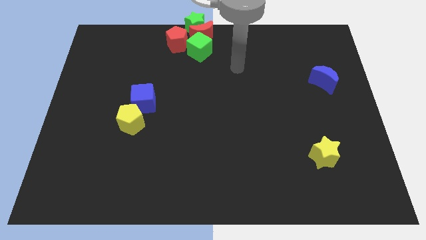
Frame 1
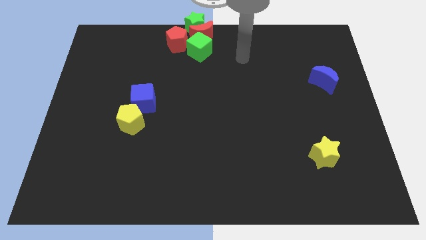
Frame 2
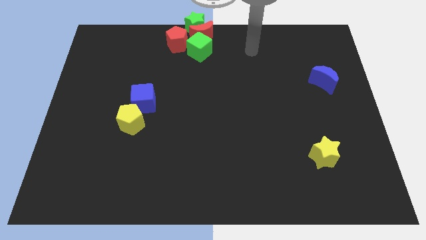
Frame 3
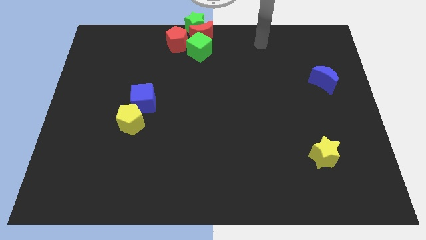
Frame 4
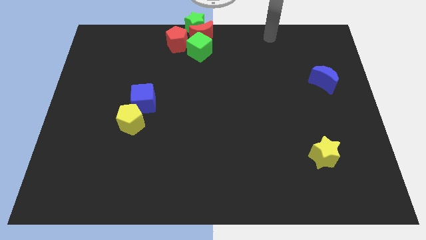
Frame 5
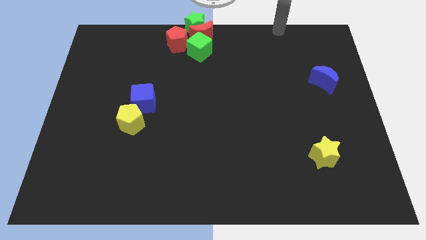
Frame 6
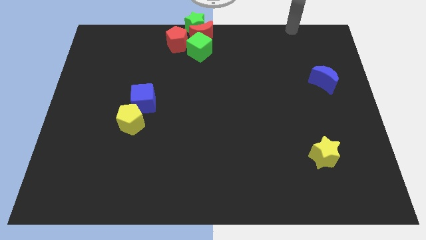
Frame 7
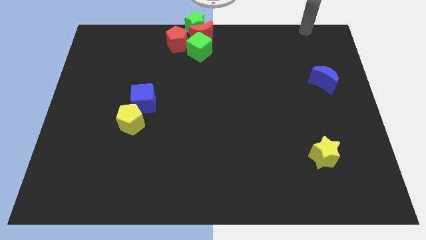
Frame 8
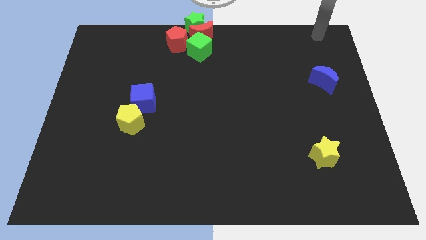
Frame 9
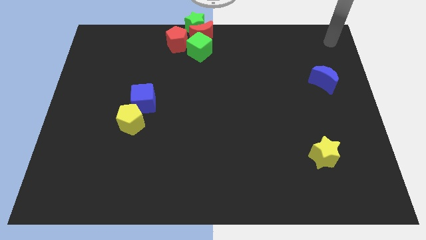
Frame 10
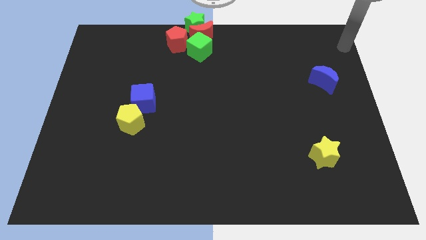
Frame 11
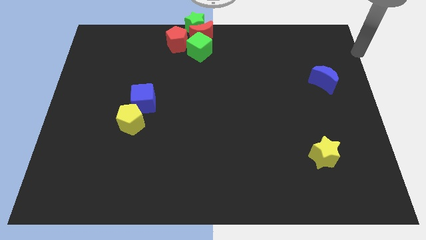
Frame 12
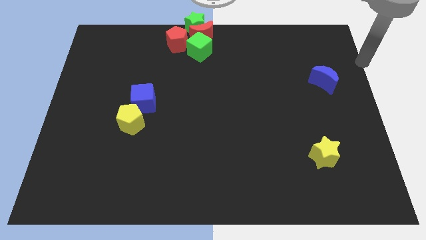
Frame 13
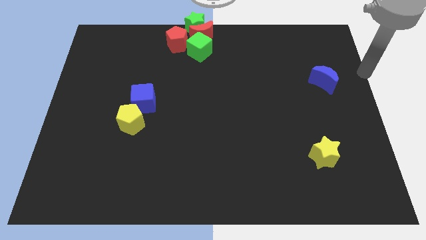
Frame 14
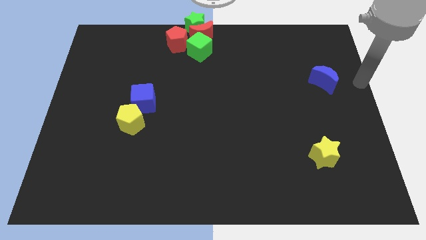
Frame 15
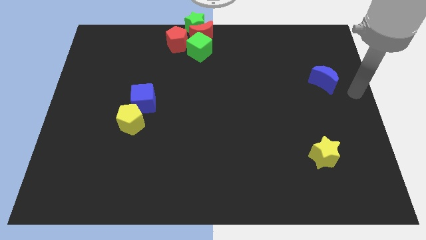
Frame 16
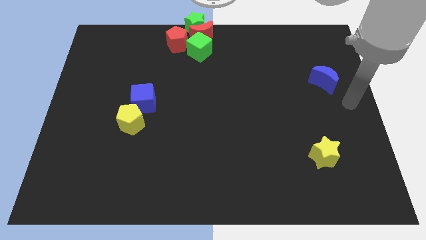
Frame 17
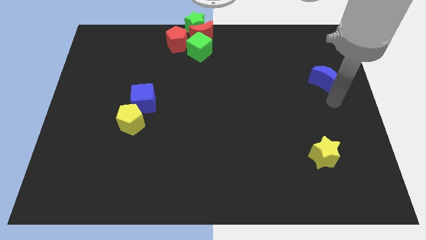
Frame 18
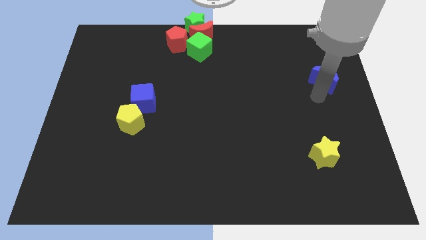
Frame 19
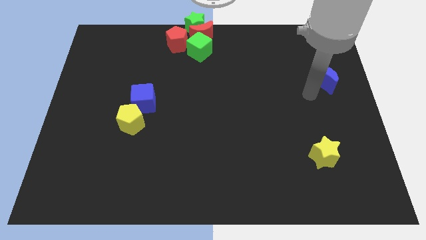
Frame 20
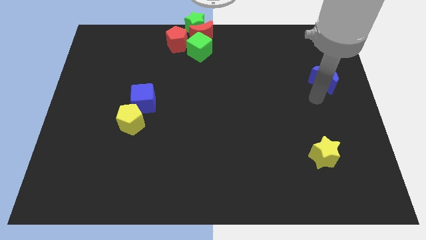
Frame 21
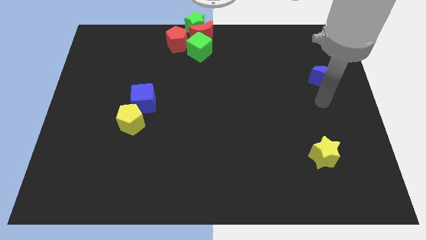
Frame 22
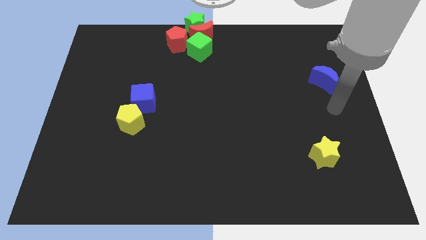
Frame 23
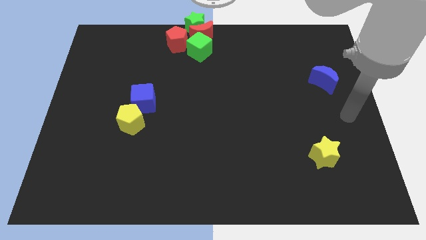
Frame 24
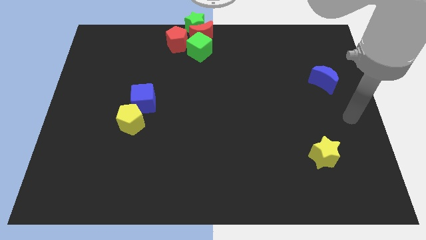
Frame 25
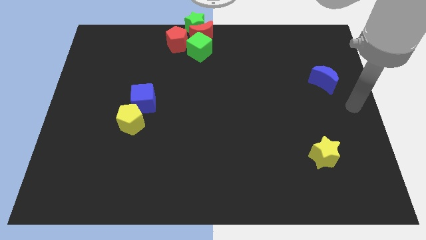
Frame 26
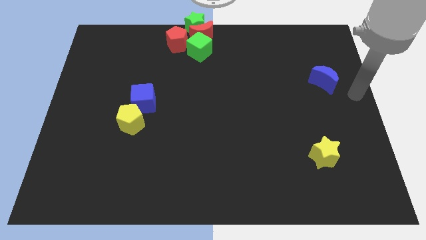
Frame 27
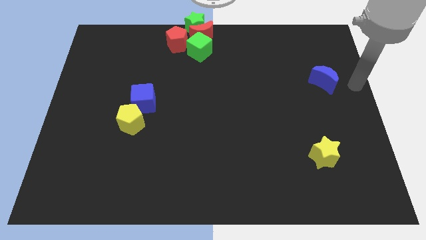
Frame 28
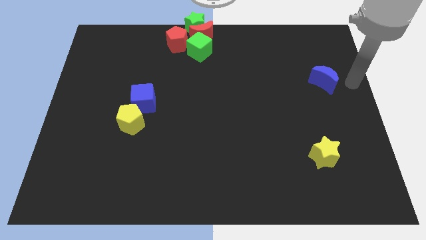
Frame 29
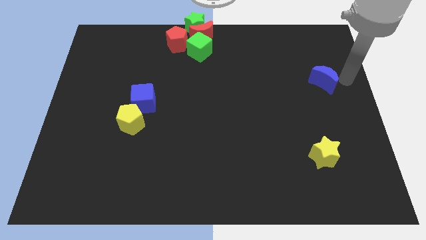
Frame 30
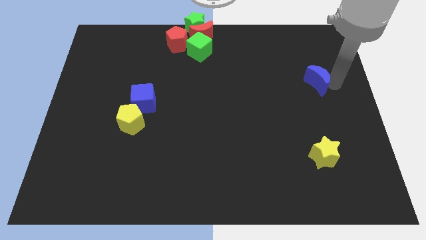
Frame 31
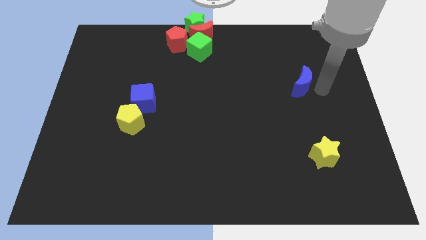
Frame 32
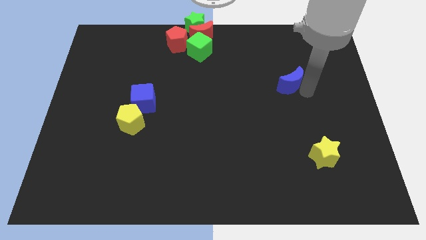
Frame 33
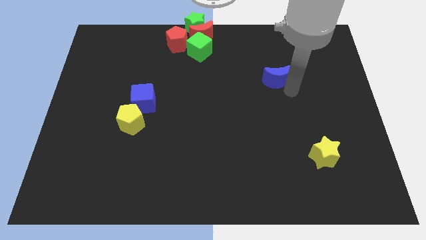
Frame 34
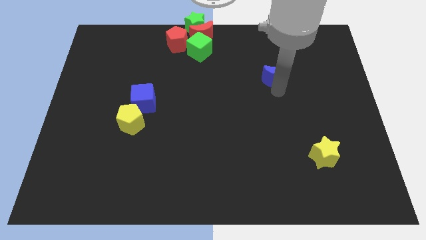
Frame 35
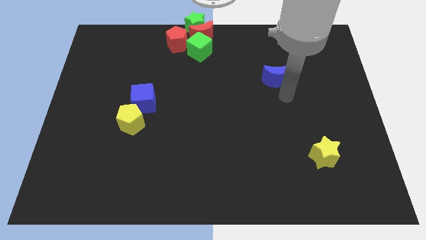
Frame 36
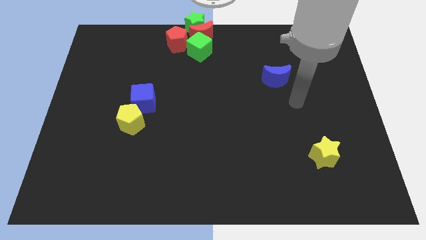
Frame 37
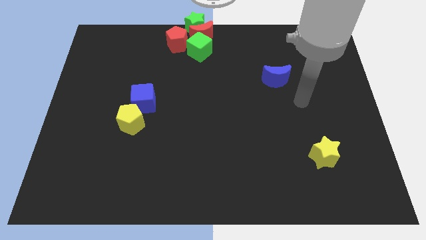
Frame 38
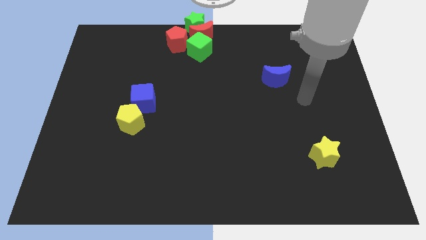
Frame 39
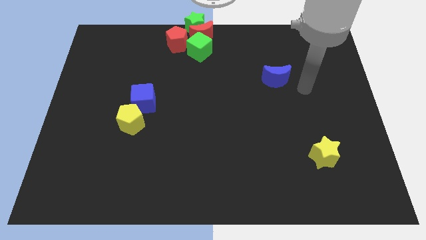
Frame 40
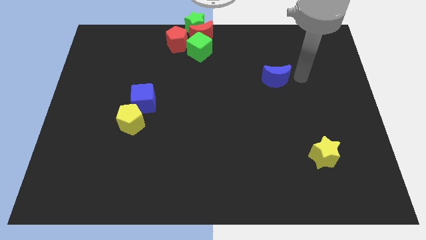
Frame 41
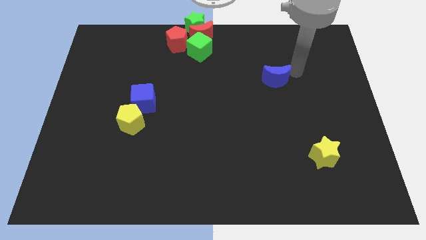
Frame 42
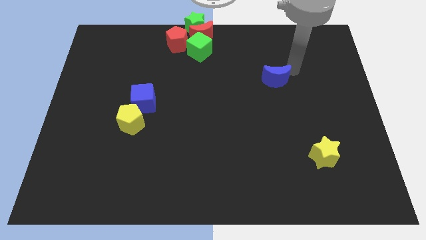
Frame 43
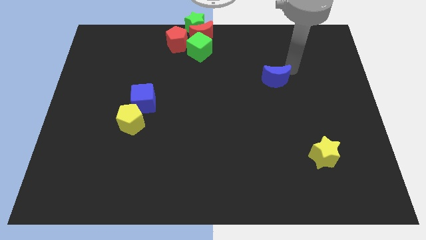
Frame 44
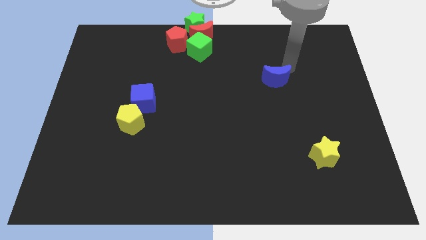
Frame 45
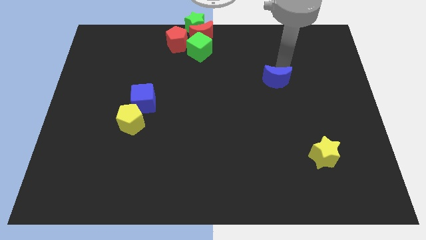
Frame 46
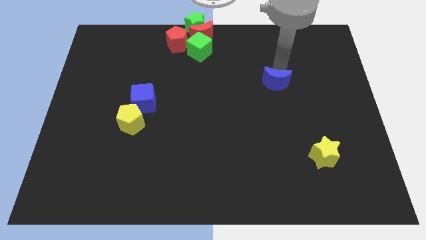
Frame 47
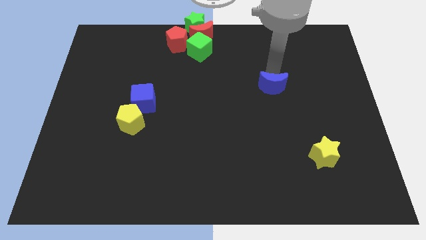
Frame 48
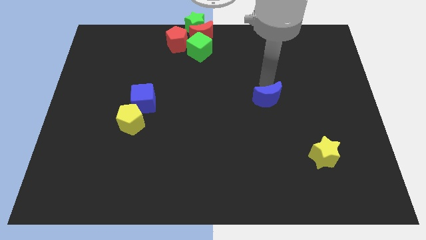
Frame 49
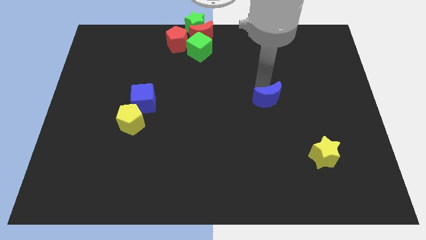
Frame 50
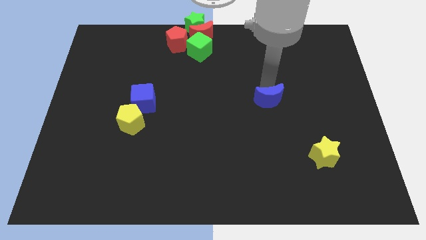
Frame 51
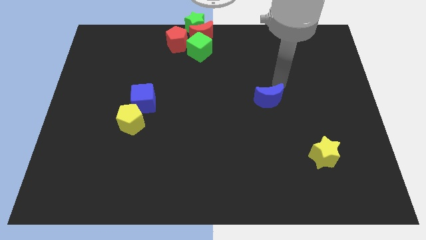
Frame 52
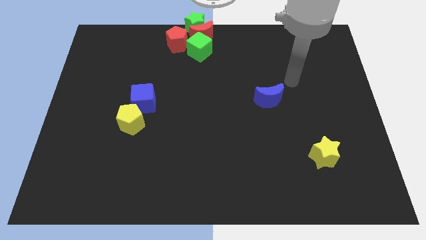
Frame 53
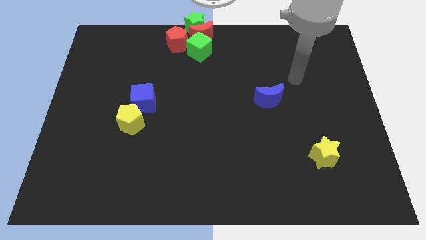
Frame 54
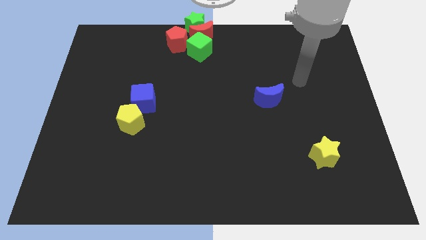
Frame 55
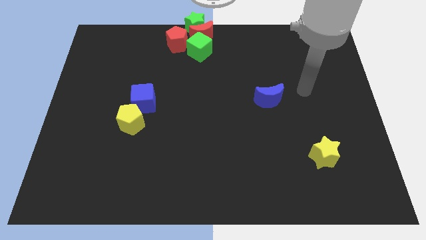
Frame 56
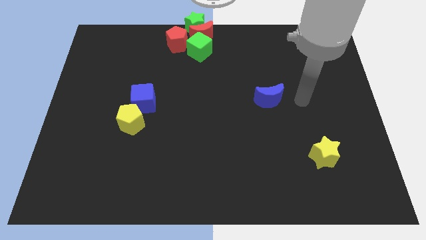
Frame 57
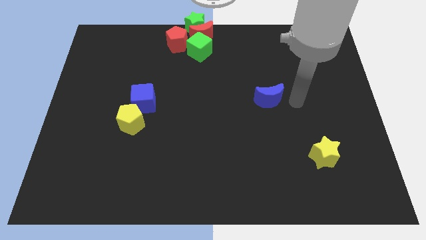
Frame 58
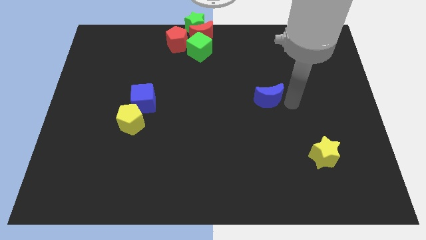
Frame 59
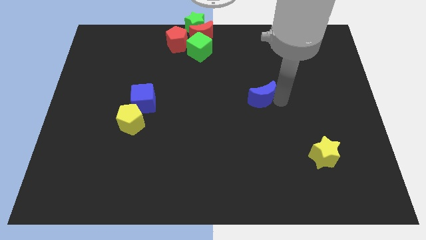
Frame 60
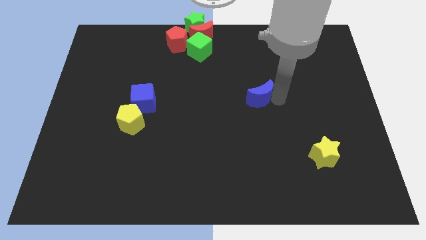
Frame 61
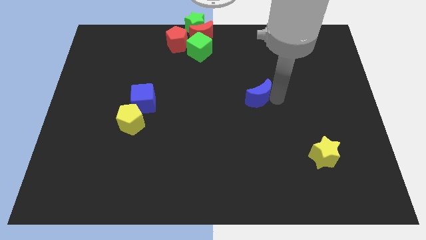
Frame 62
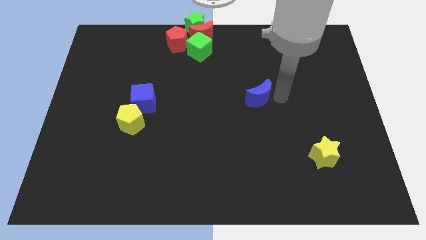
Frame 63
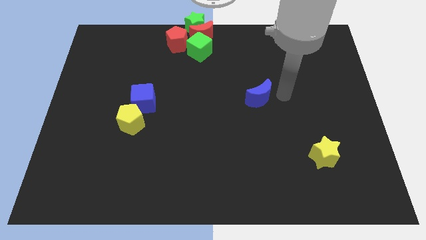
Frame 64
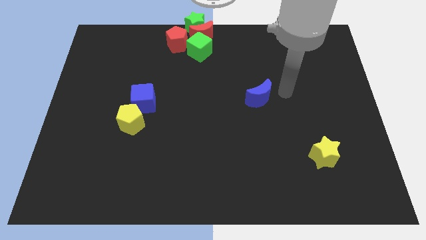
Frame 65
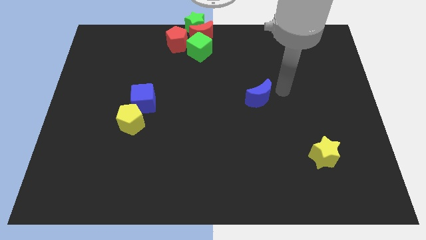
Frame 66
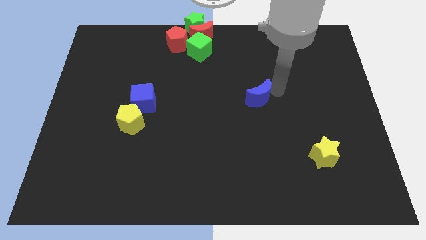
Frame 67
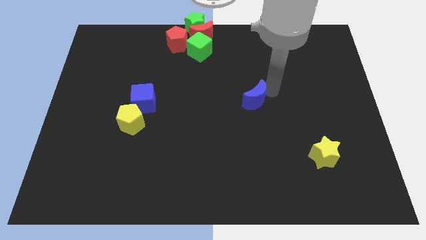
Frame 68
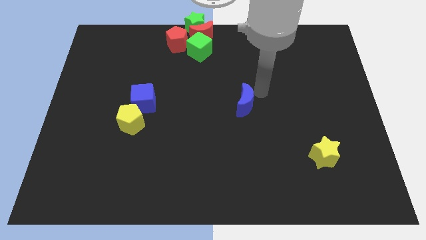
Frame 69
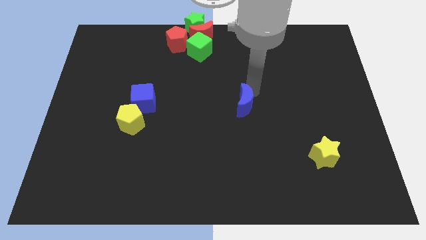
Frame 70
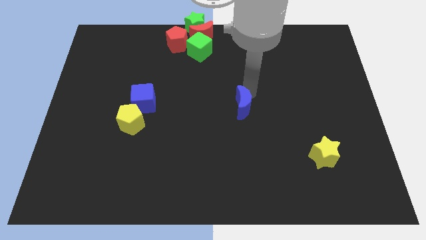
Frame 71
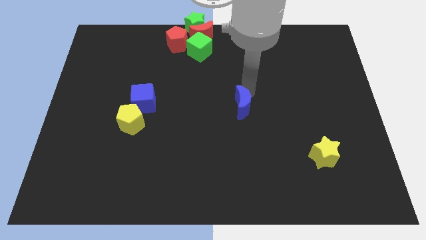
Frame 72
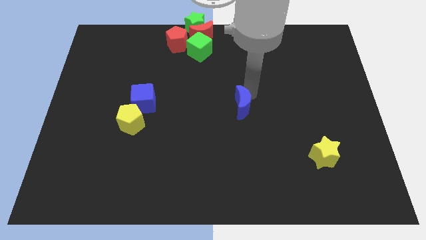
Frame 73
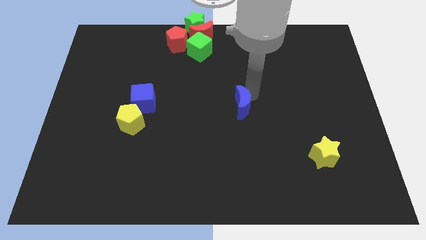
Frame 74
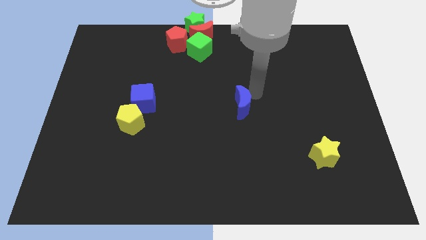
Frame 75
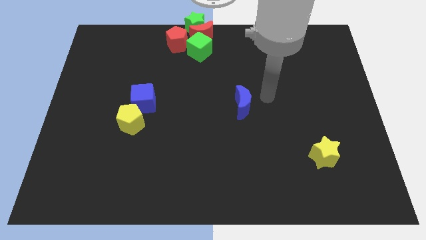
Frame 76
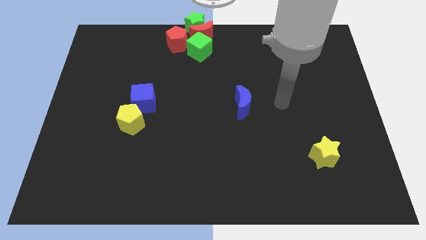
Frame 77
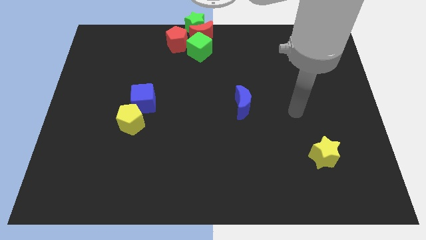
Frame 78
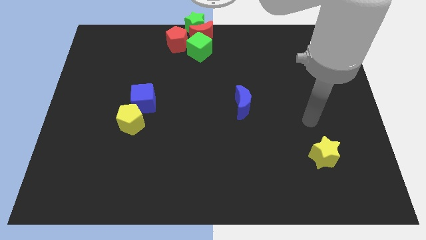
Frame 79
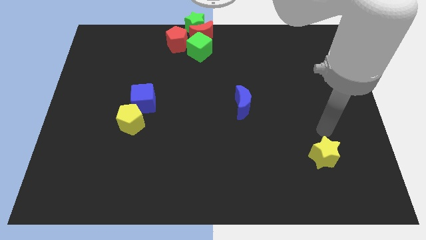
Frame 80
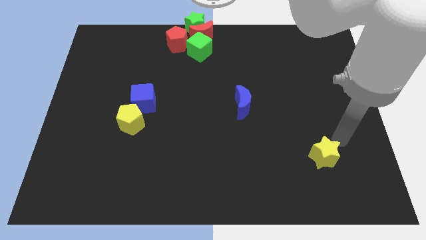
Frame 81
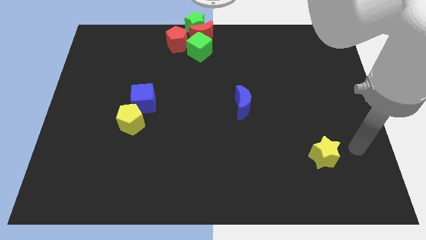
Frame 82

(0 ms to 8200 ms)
move blue moon to the middle of the board

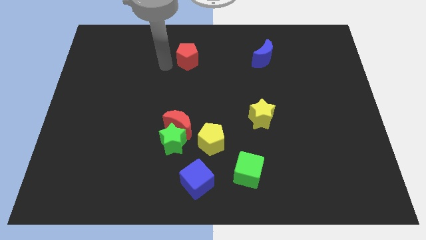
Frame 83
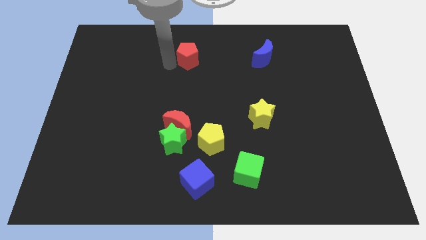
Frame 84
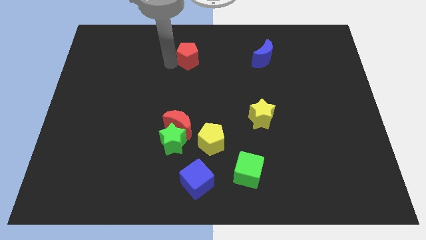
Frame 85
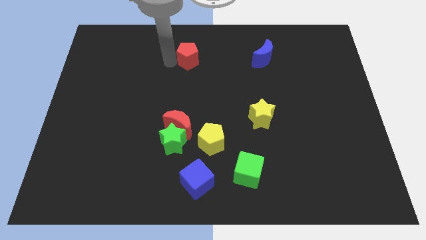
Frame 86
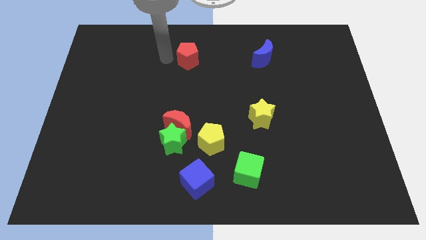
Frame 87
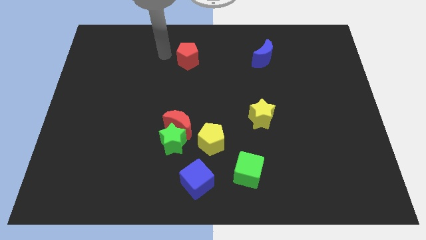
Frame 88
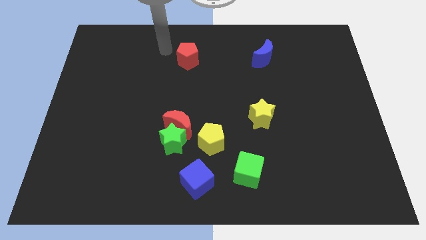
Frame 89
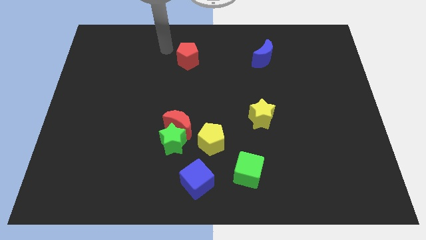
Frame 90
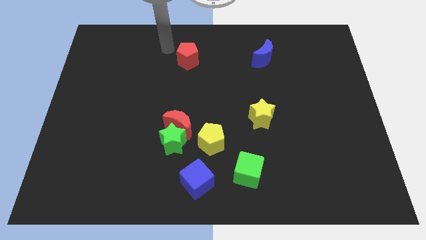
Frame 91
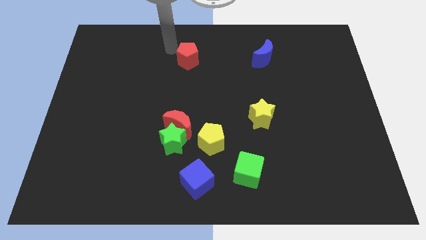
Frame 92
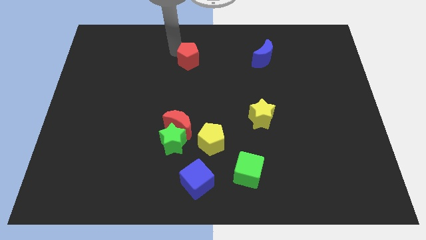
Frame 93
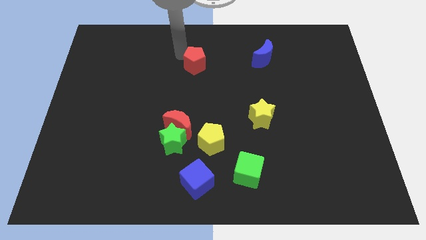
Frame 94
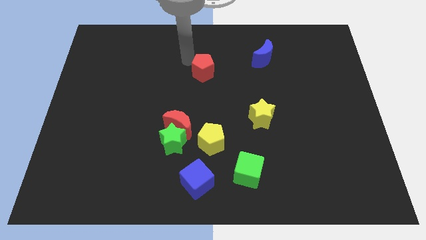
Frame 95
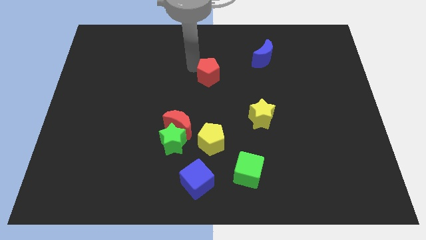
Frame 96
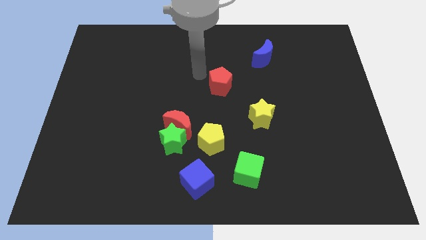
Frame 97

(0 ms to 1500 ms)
place the red pentagon top left of the yellow star
